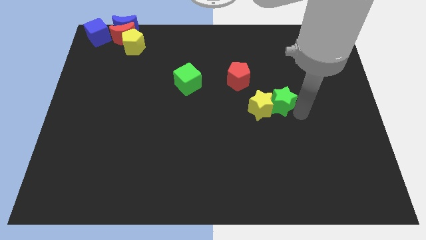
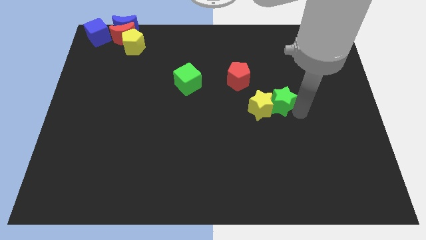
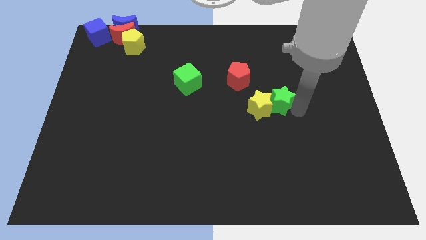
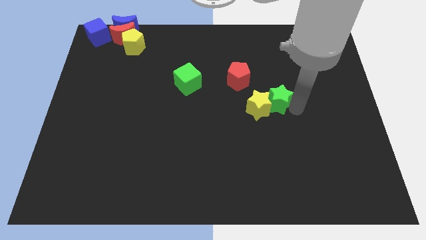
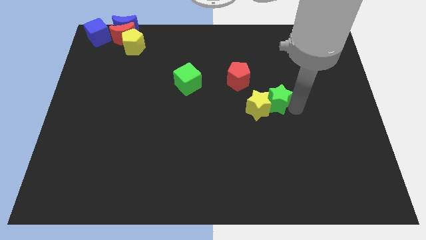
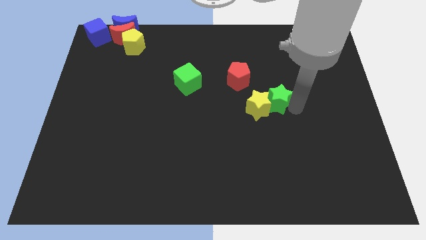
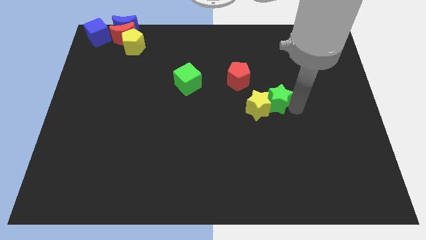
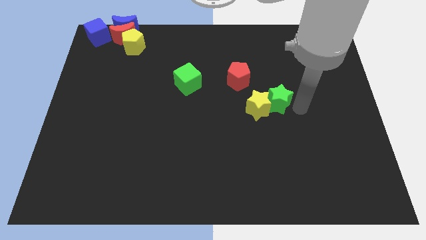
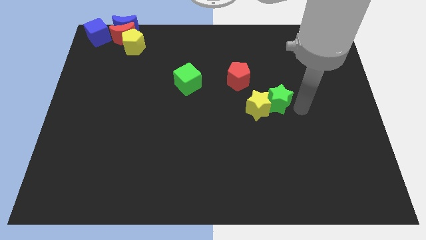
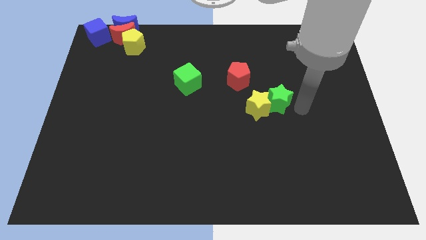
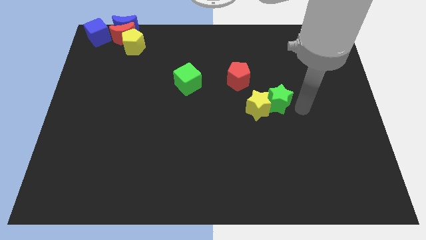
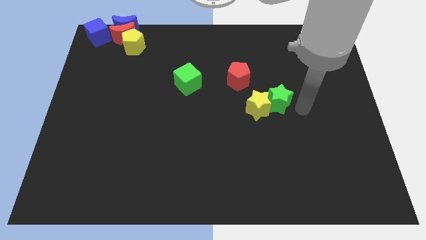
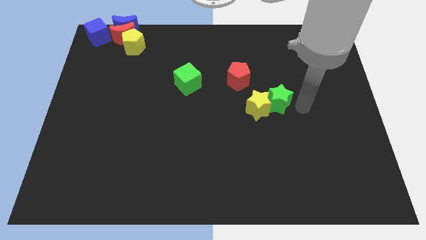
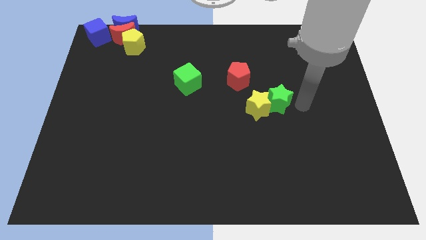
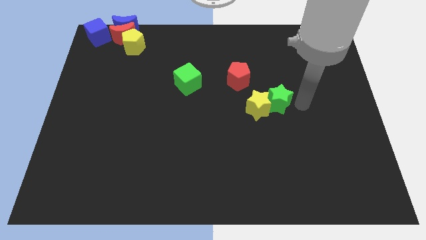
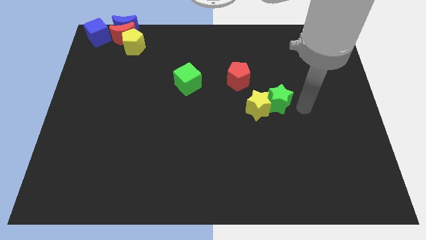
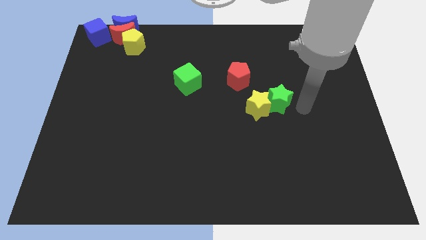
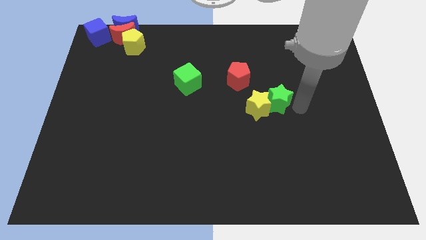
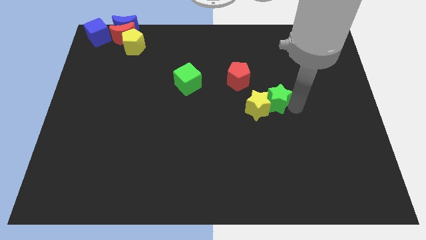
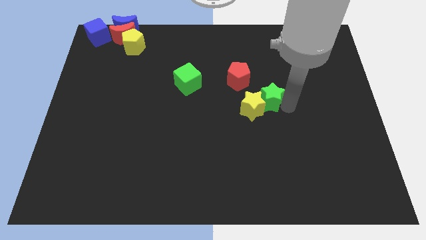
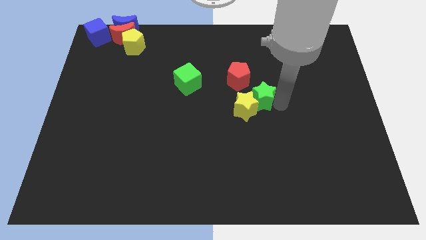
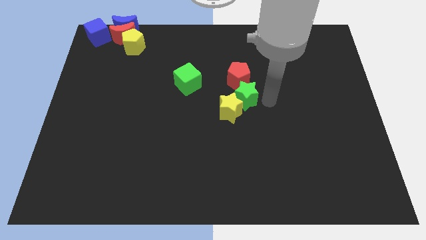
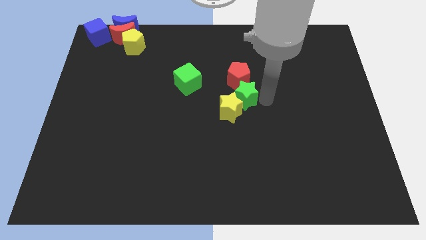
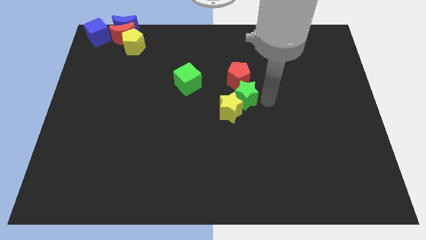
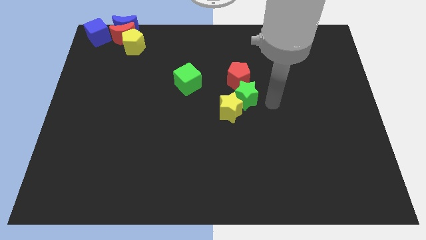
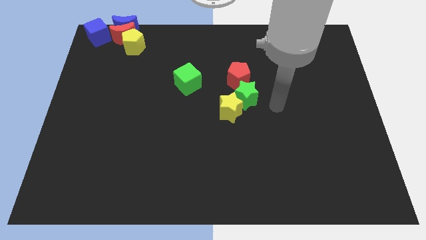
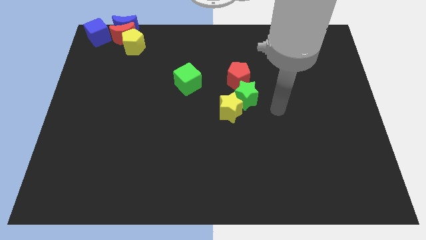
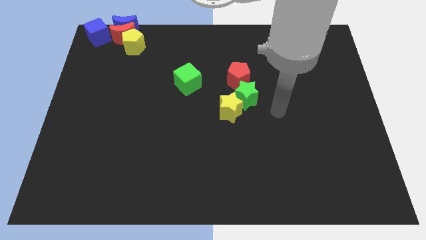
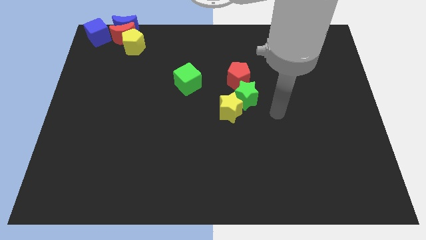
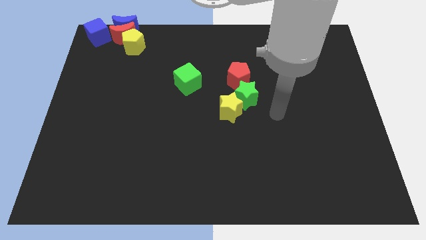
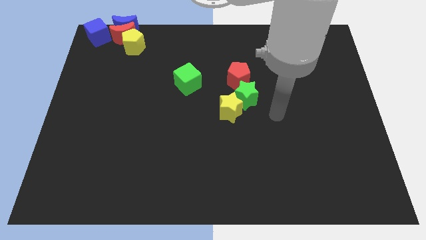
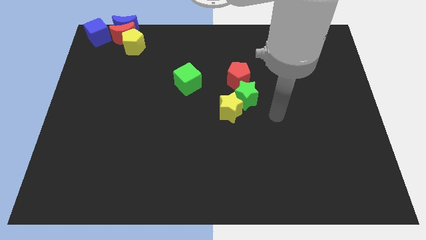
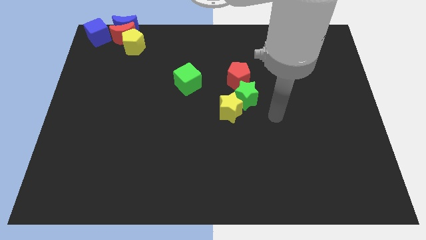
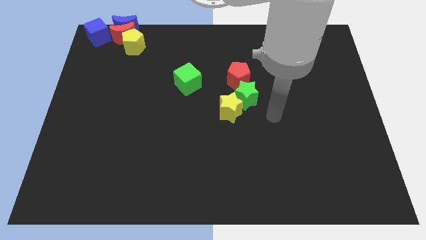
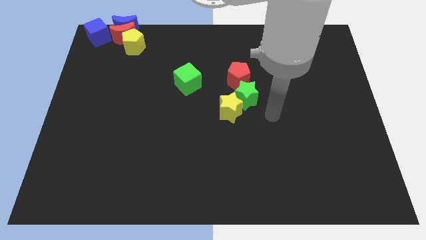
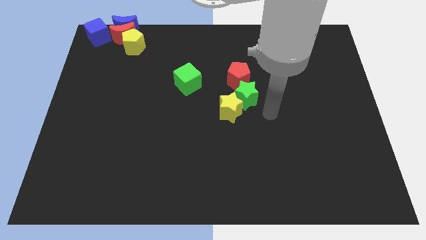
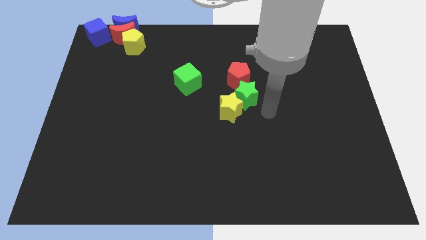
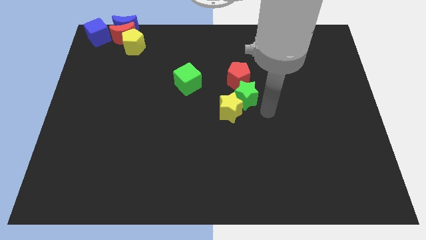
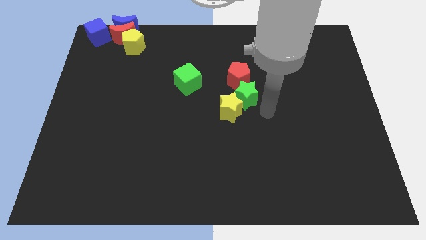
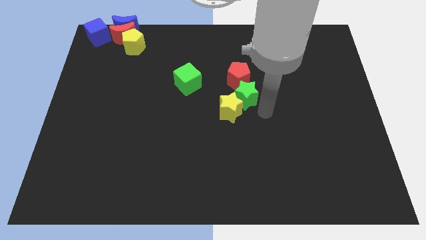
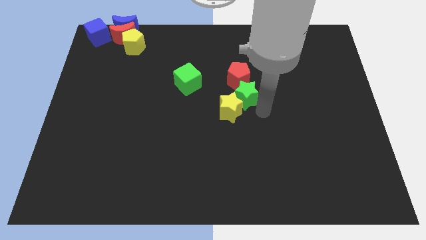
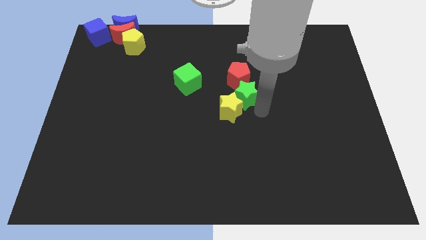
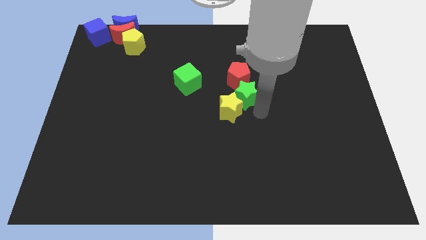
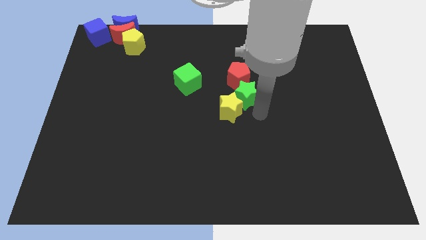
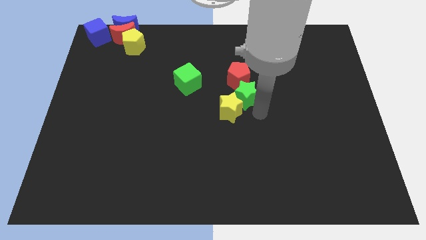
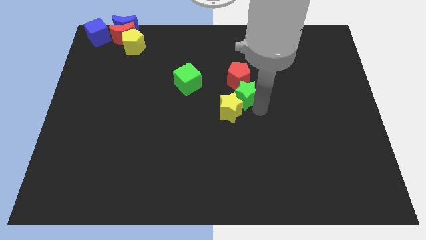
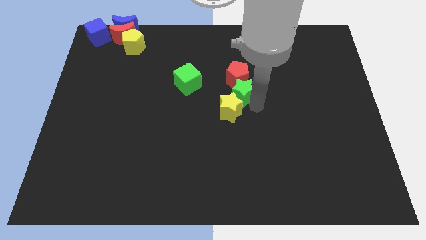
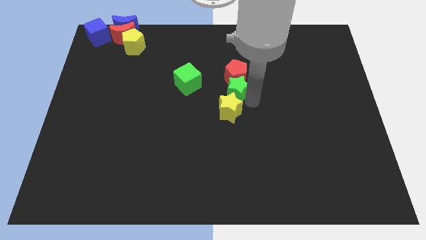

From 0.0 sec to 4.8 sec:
place the green star in between yellow star and red pentagon

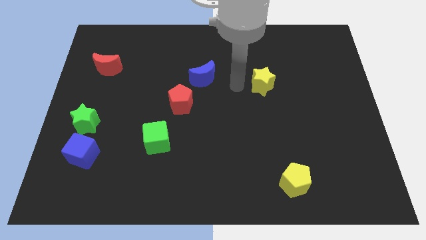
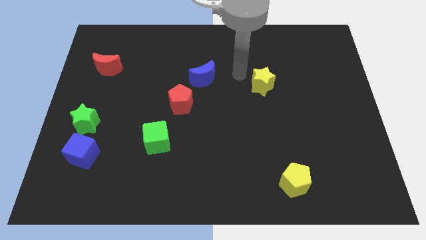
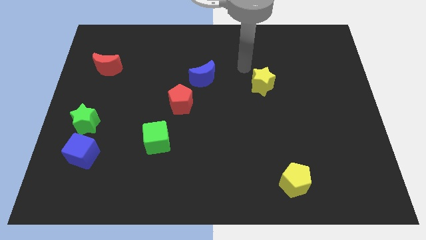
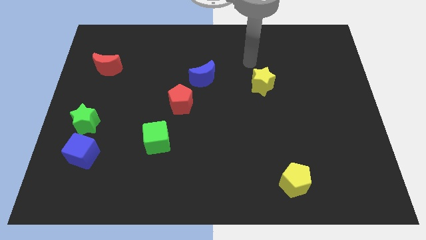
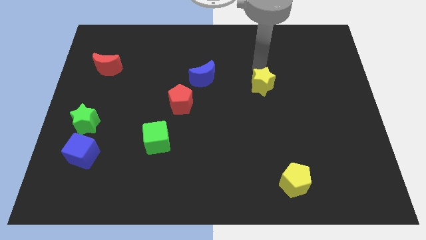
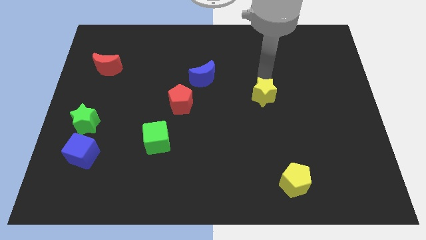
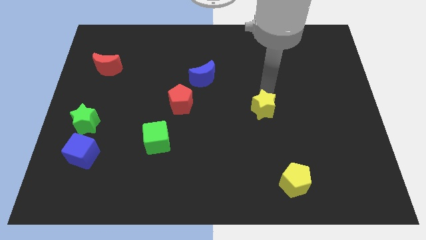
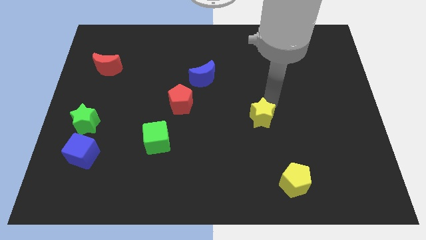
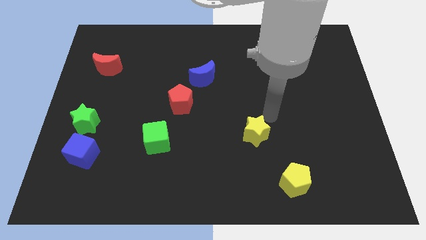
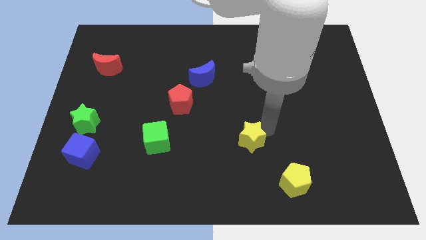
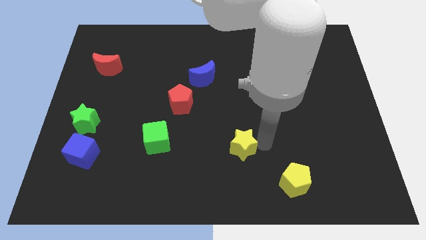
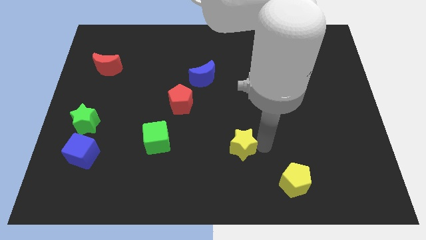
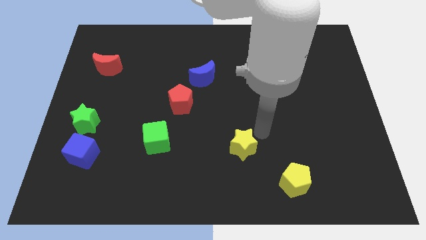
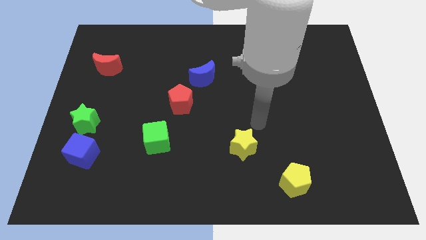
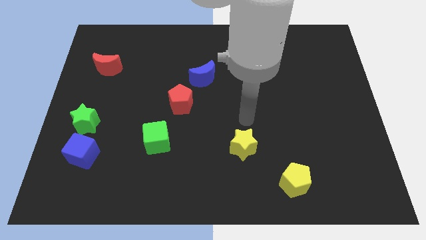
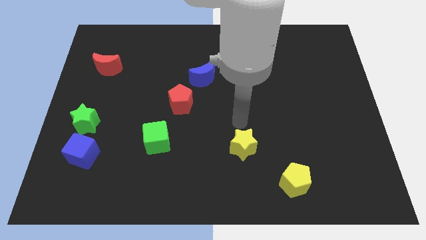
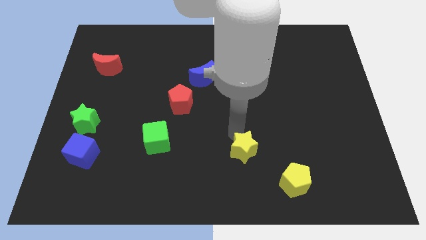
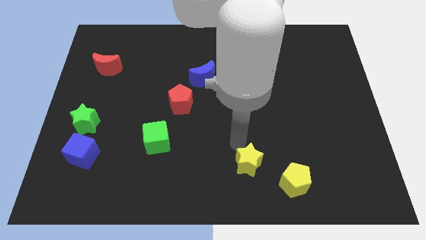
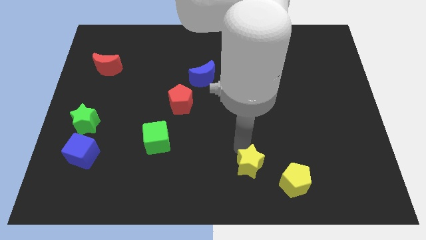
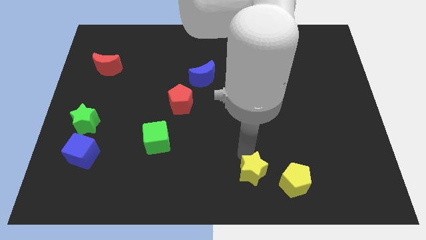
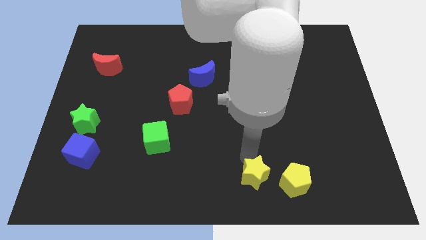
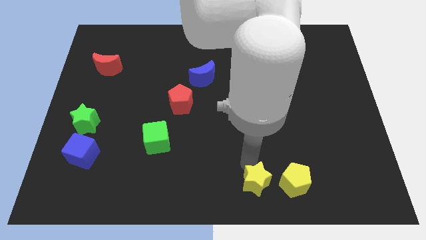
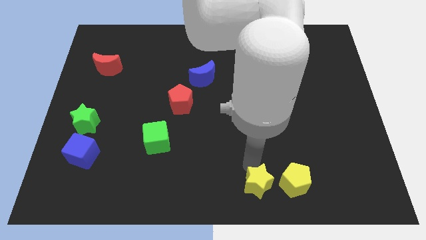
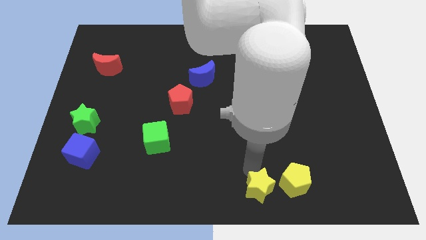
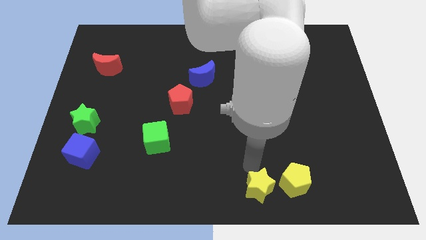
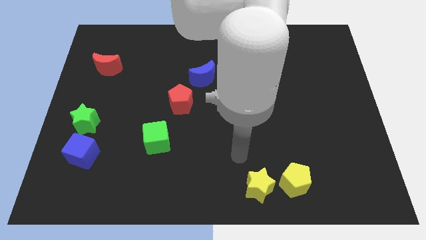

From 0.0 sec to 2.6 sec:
push the yellow star left to the yellow pentagon

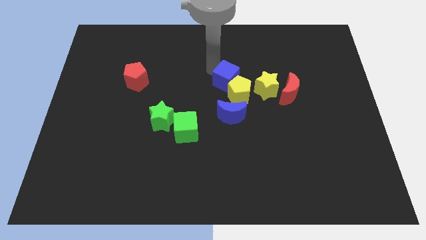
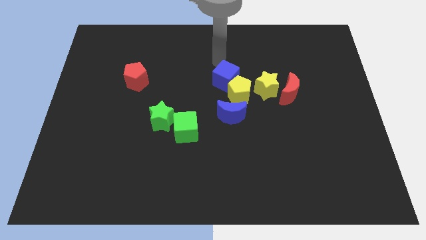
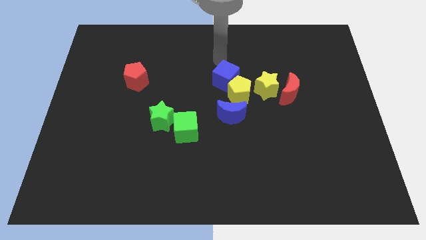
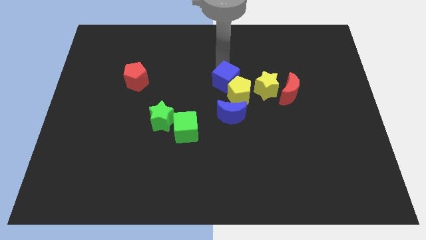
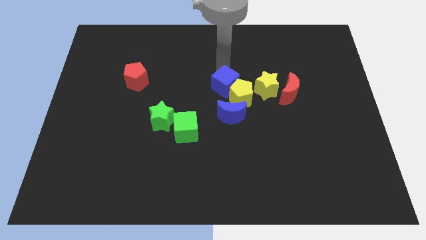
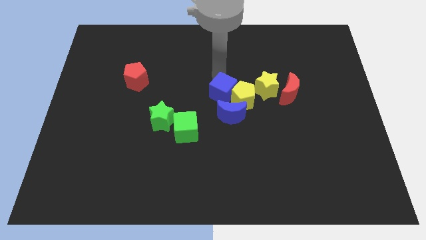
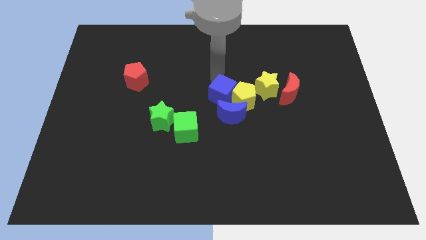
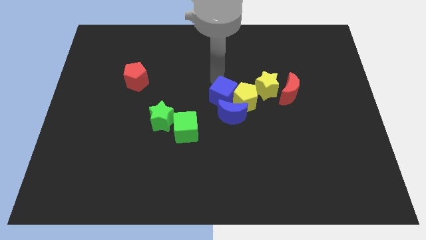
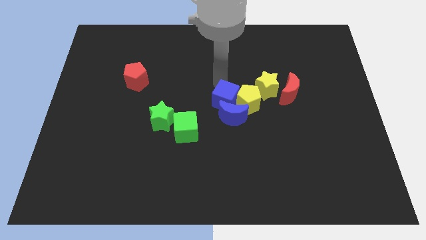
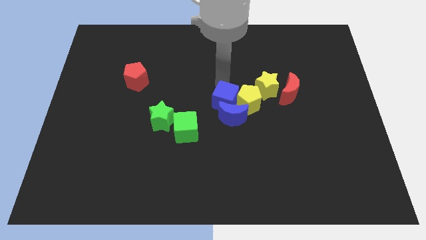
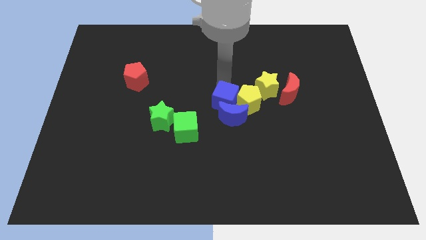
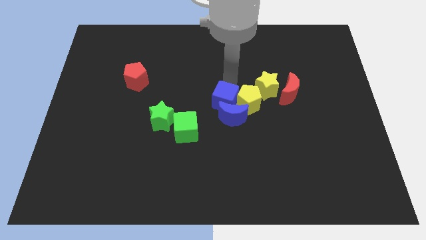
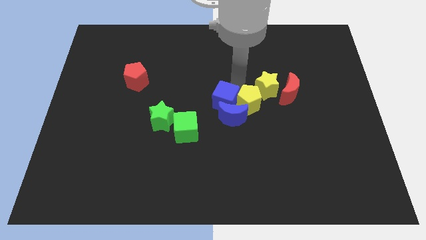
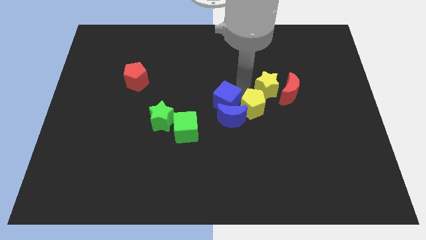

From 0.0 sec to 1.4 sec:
push the blue cube into blue moon

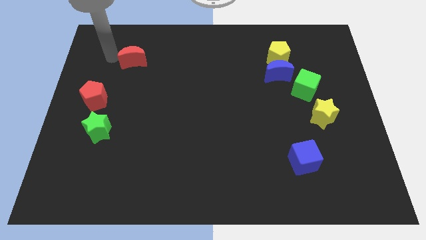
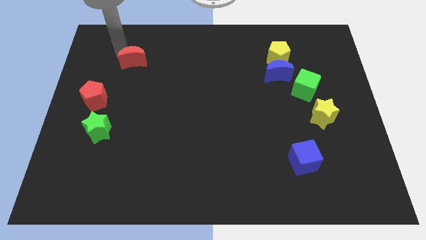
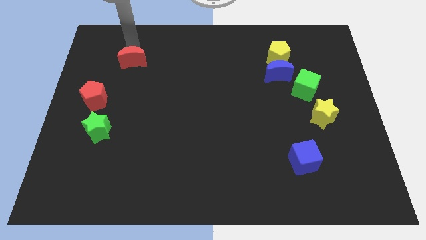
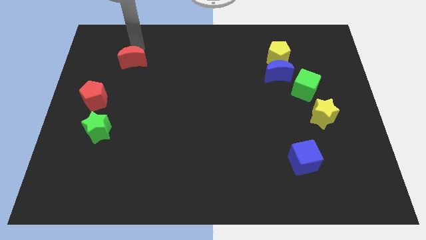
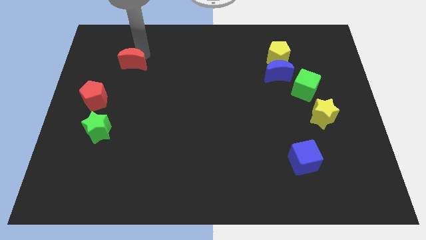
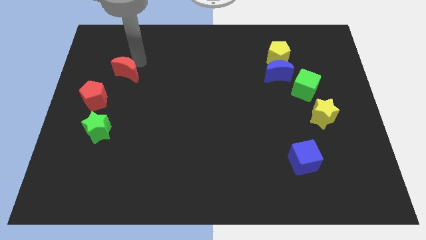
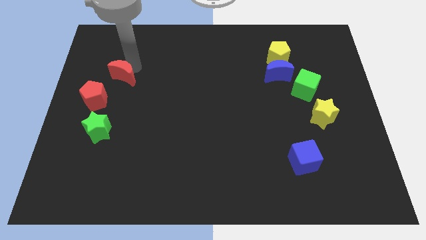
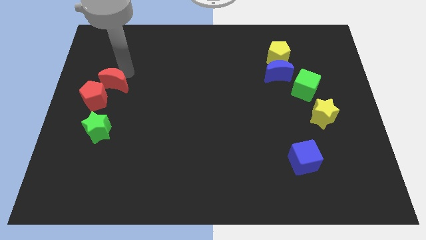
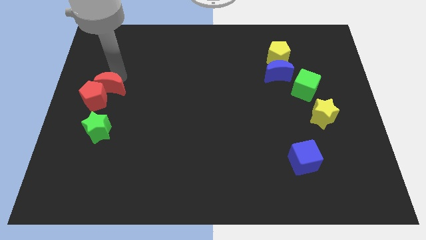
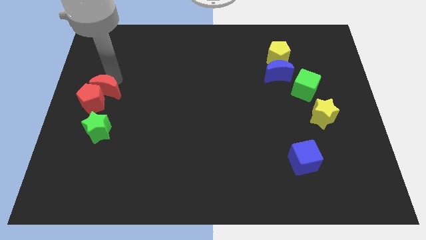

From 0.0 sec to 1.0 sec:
make the red crescent touch the top side of the red pentagon
